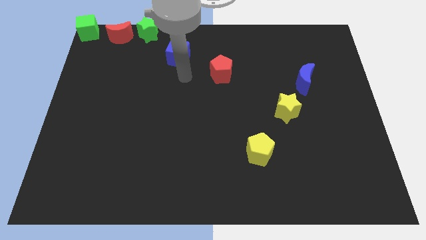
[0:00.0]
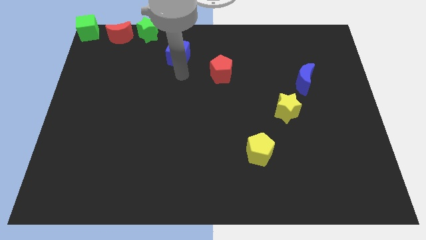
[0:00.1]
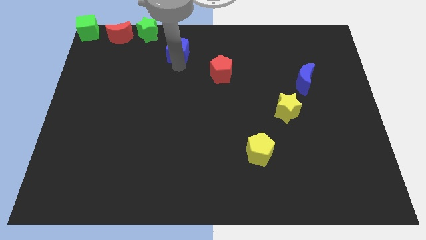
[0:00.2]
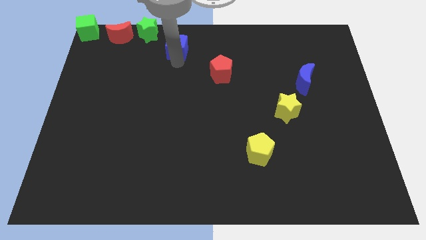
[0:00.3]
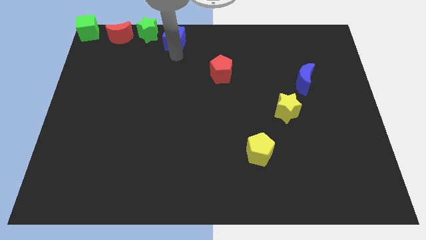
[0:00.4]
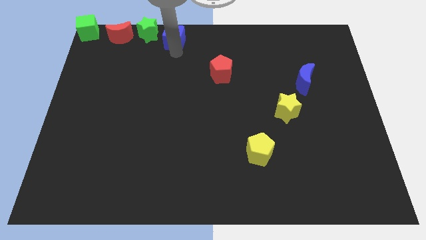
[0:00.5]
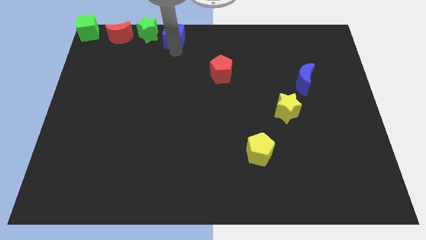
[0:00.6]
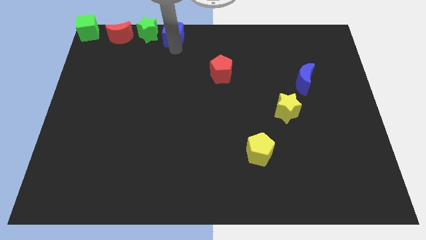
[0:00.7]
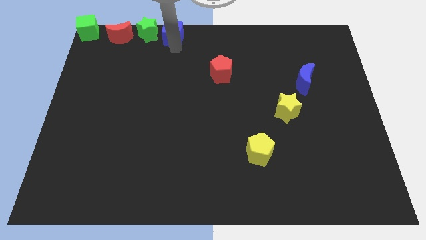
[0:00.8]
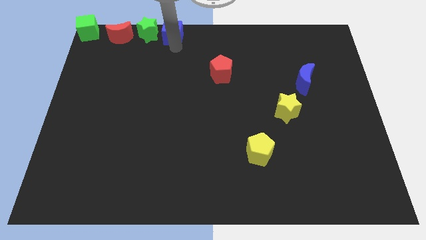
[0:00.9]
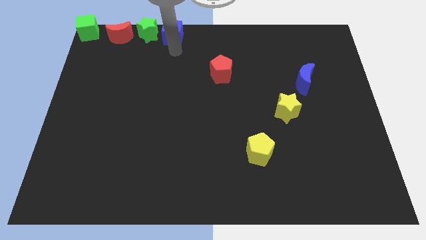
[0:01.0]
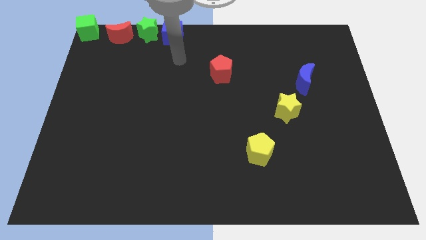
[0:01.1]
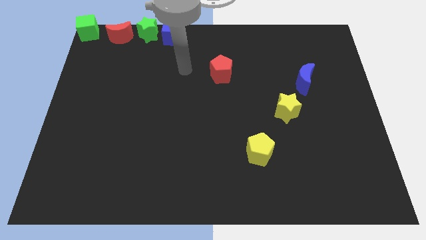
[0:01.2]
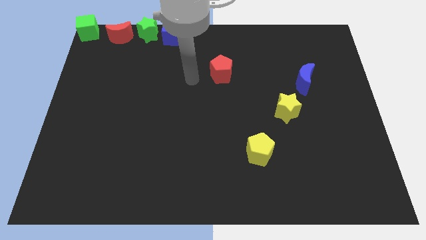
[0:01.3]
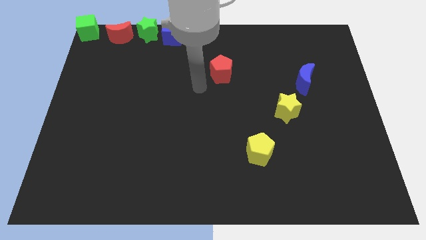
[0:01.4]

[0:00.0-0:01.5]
adjust the blue cube to the right of the green star

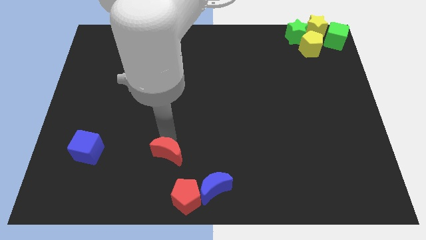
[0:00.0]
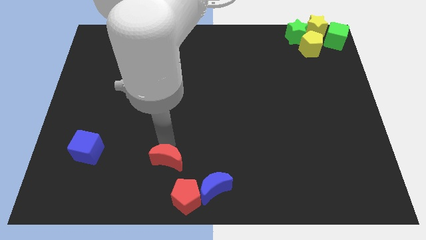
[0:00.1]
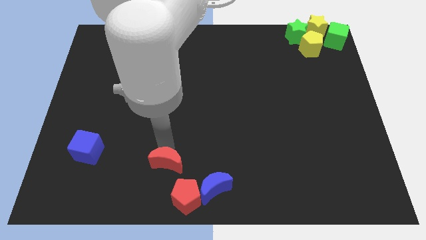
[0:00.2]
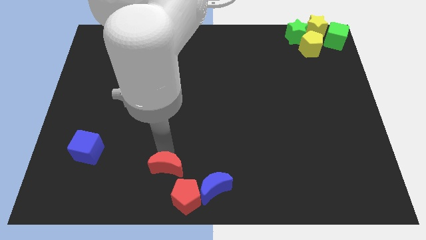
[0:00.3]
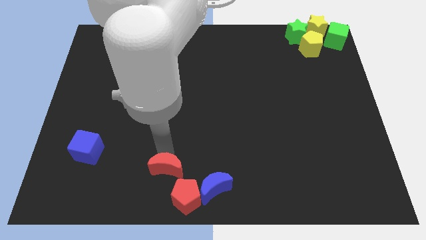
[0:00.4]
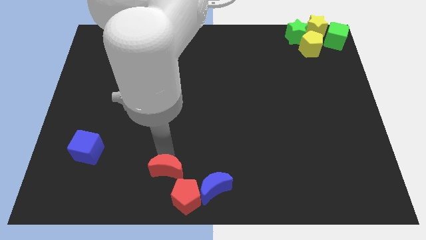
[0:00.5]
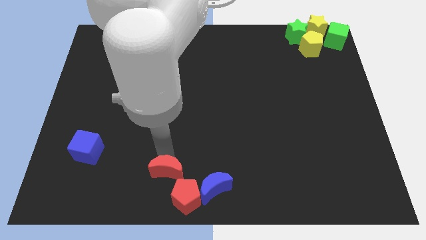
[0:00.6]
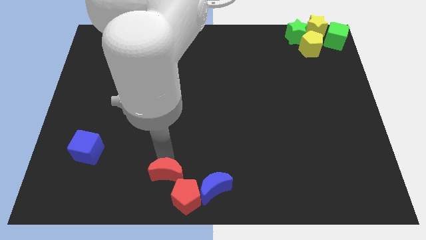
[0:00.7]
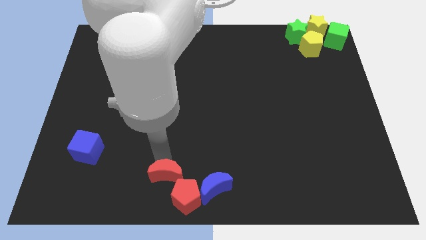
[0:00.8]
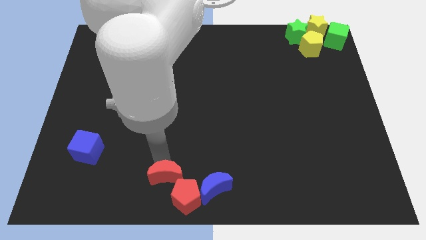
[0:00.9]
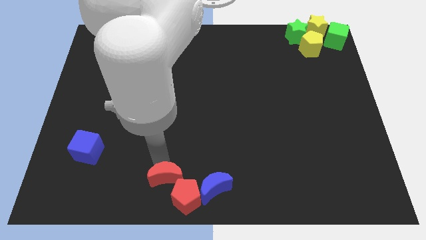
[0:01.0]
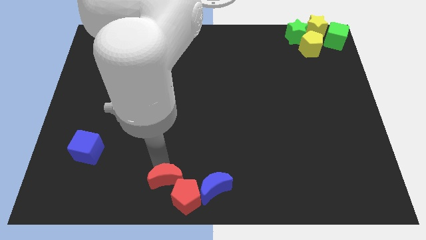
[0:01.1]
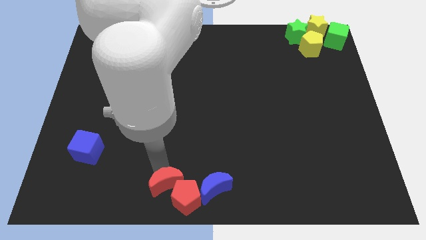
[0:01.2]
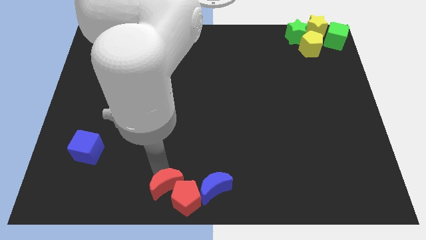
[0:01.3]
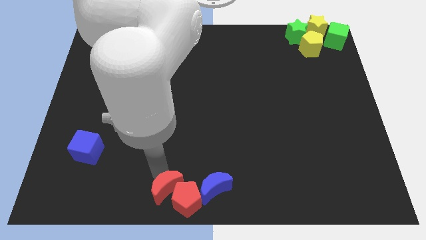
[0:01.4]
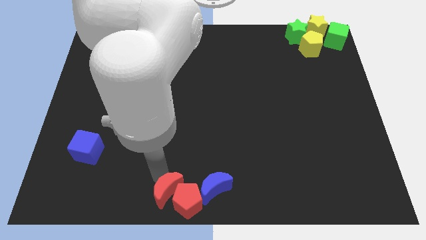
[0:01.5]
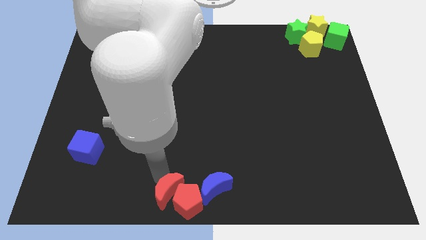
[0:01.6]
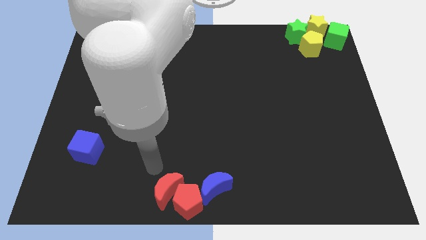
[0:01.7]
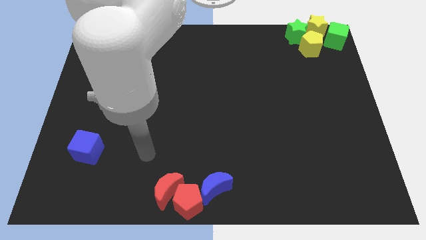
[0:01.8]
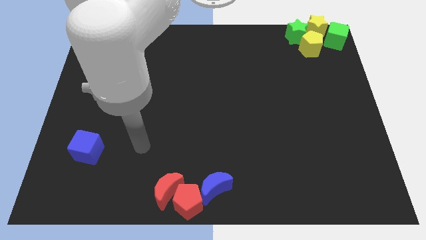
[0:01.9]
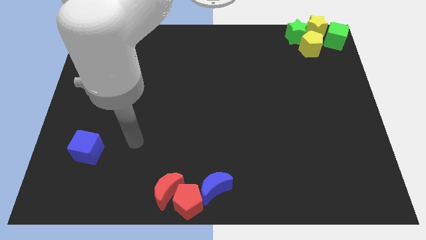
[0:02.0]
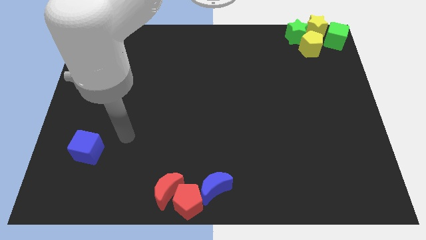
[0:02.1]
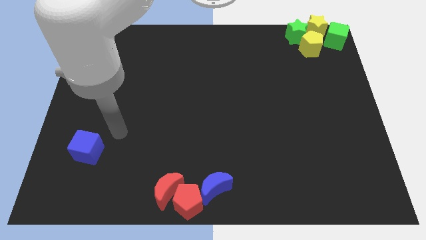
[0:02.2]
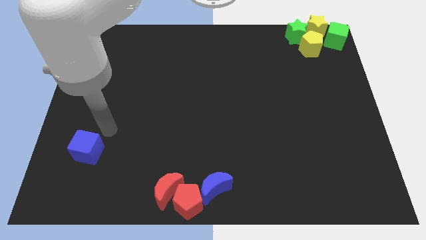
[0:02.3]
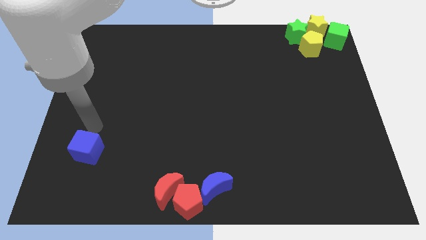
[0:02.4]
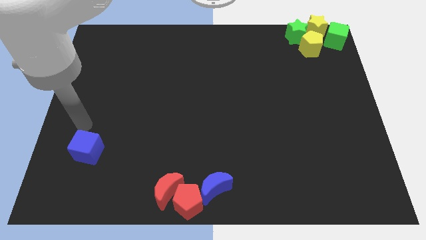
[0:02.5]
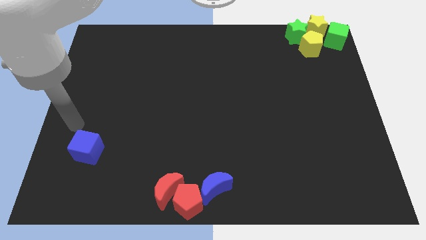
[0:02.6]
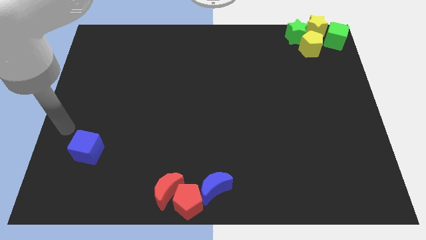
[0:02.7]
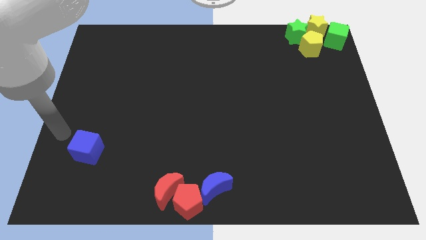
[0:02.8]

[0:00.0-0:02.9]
push the red crescent into the red pentagon

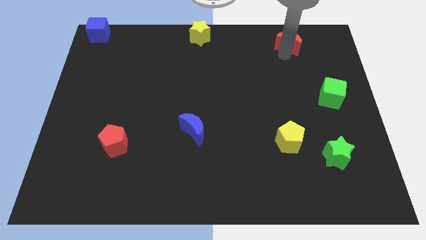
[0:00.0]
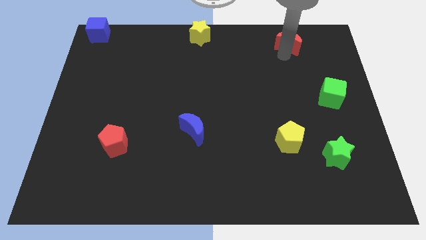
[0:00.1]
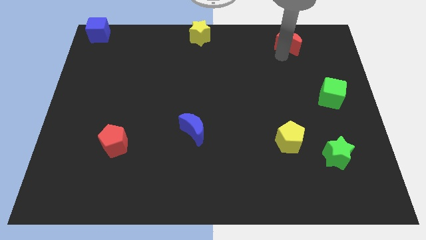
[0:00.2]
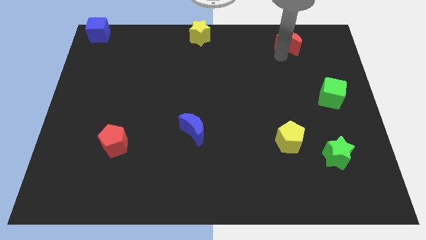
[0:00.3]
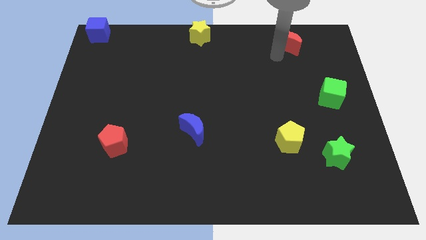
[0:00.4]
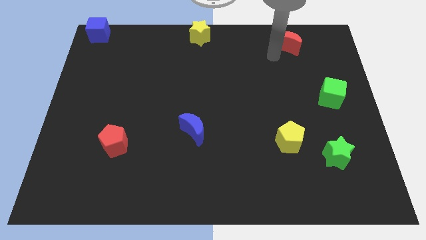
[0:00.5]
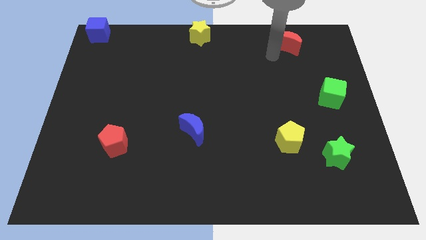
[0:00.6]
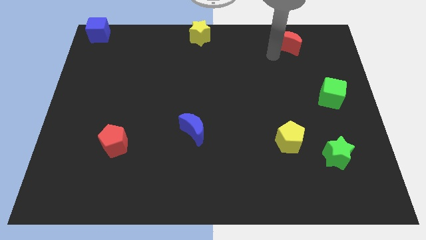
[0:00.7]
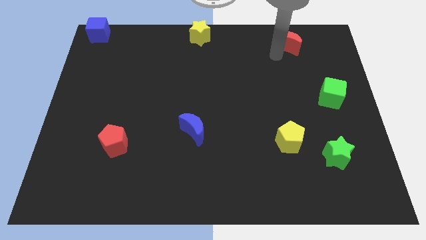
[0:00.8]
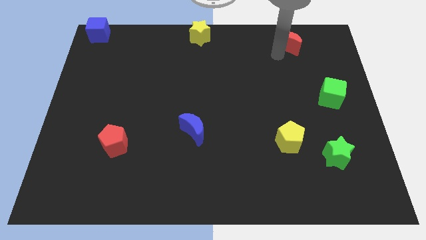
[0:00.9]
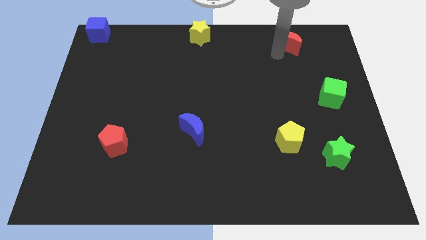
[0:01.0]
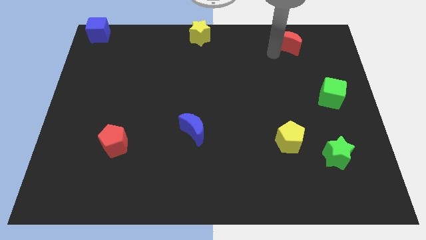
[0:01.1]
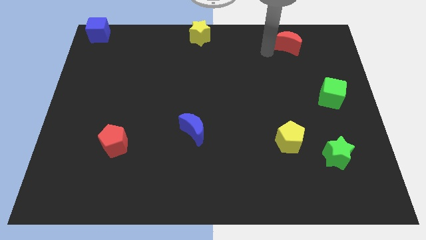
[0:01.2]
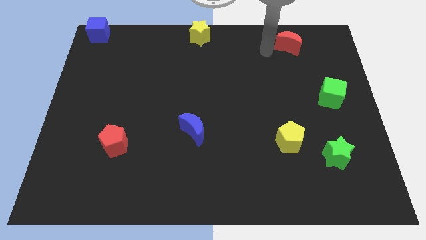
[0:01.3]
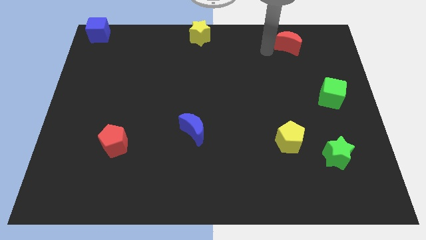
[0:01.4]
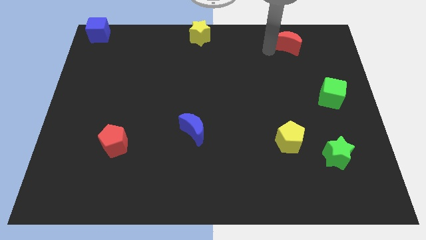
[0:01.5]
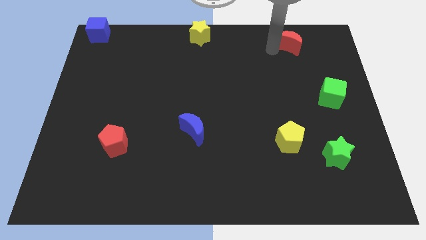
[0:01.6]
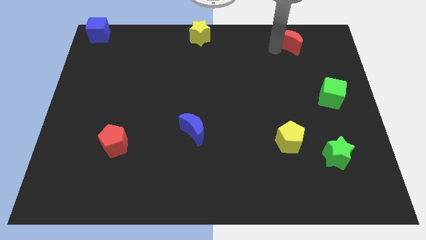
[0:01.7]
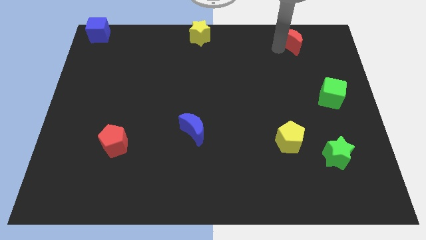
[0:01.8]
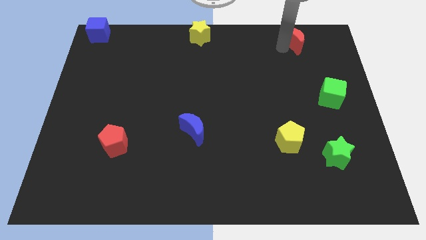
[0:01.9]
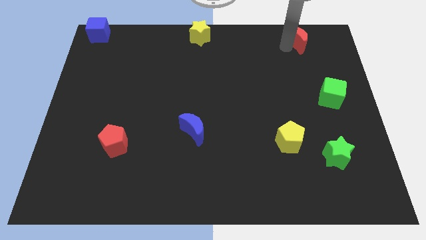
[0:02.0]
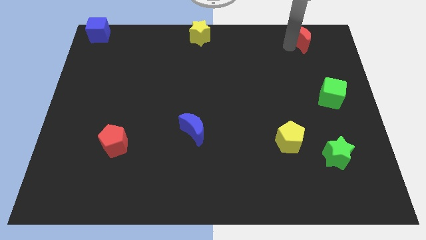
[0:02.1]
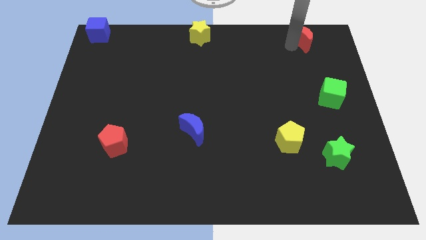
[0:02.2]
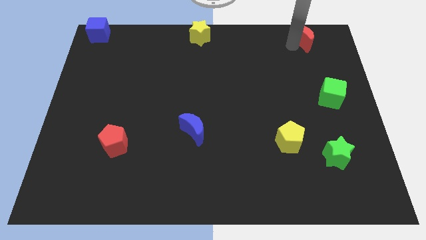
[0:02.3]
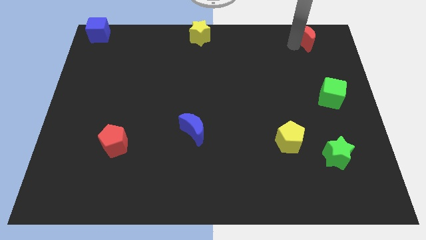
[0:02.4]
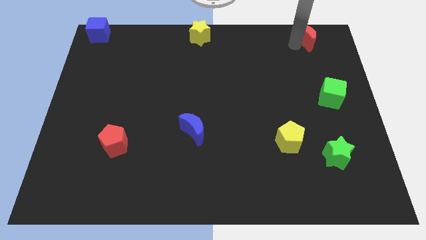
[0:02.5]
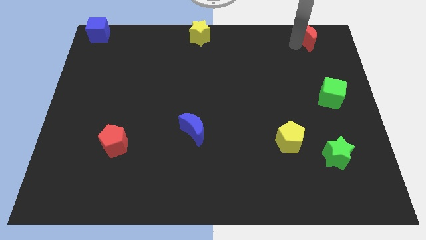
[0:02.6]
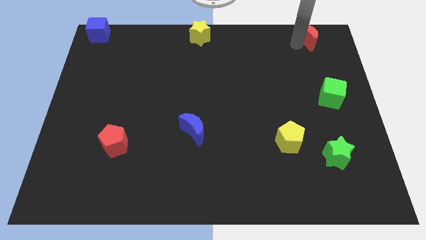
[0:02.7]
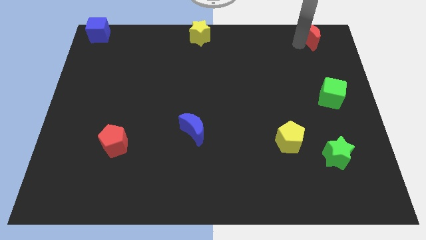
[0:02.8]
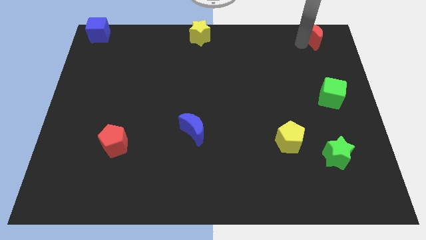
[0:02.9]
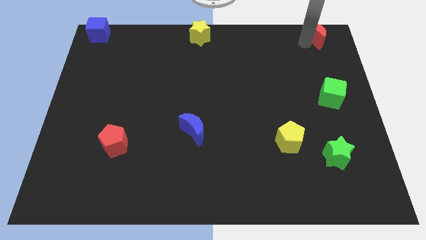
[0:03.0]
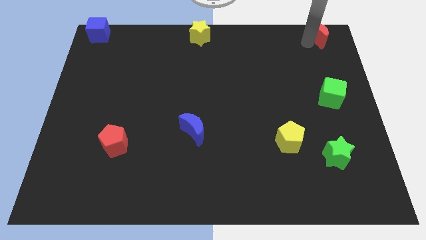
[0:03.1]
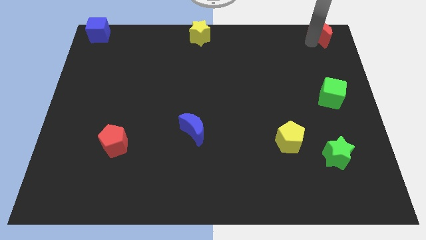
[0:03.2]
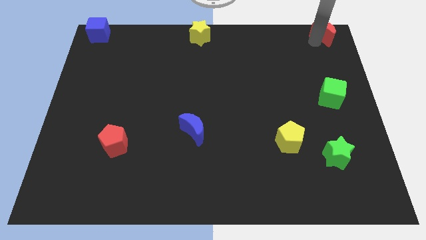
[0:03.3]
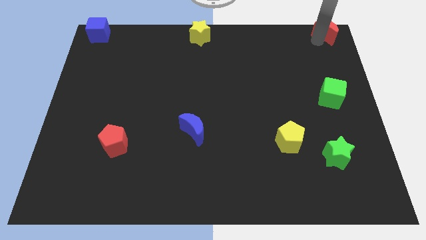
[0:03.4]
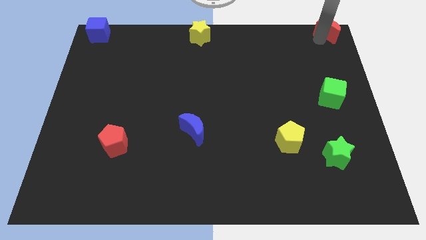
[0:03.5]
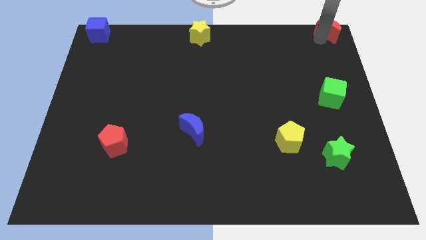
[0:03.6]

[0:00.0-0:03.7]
place the red crescent towards the top right of the board

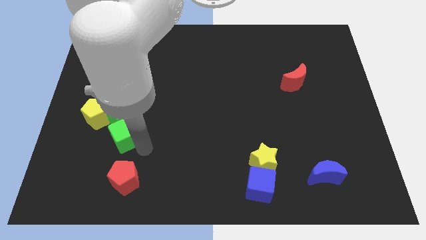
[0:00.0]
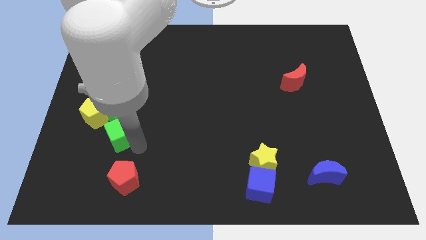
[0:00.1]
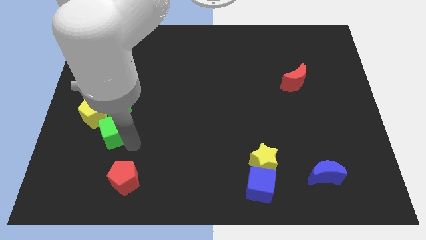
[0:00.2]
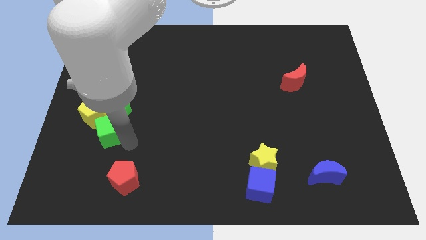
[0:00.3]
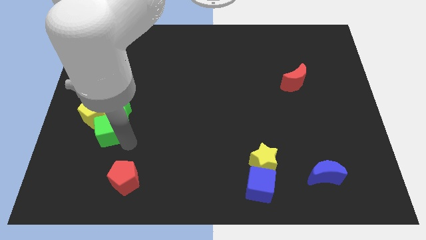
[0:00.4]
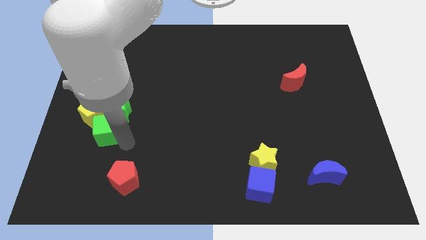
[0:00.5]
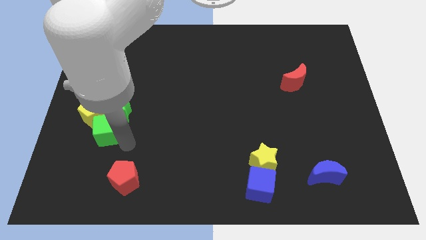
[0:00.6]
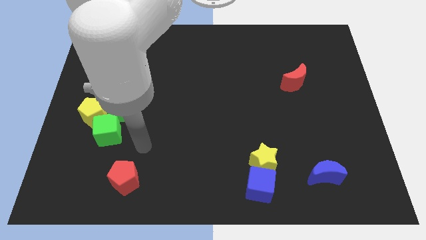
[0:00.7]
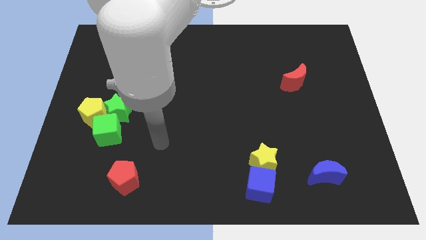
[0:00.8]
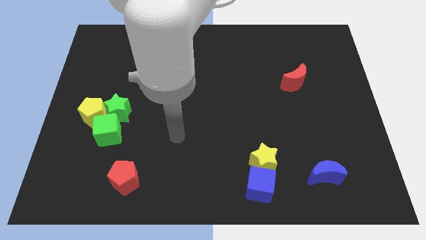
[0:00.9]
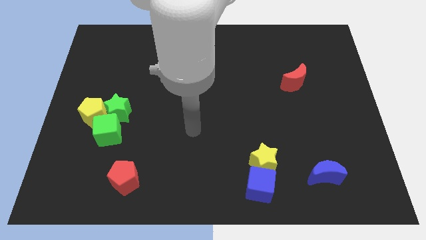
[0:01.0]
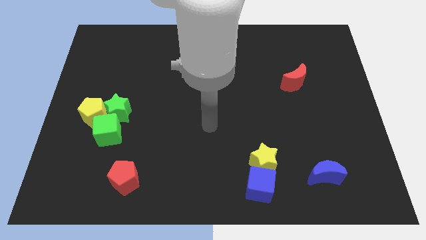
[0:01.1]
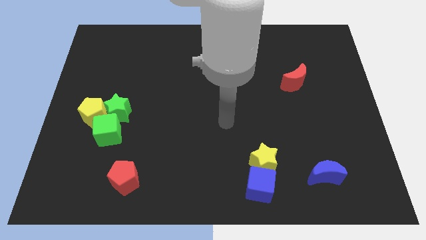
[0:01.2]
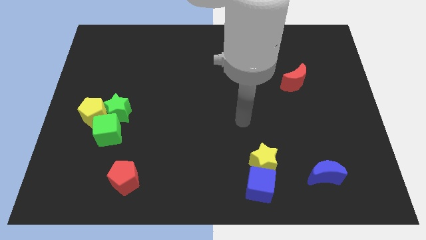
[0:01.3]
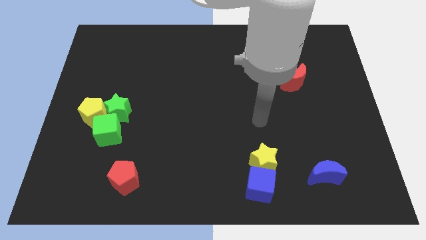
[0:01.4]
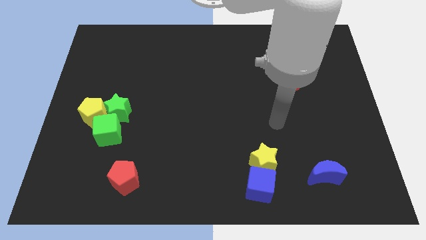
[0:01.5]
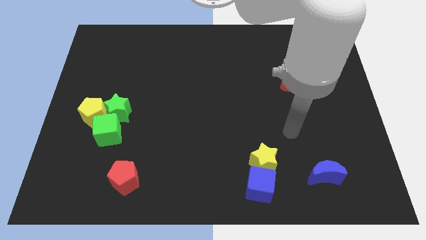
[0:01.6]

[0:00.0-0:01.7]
move the green cube towards yellow pentagon
